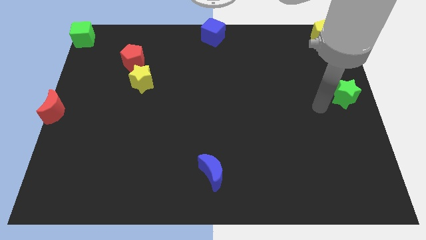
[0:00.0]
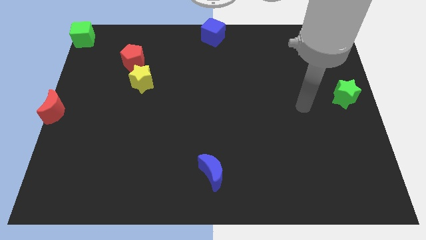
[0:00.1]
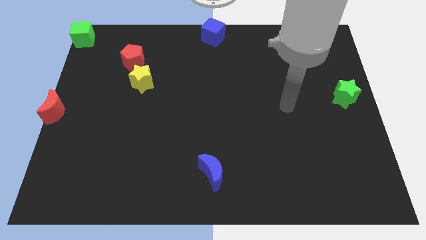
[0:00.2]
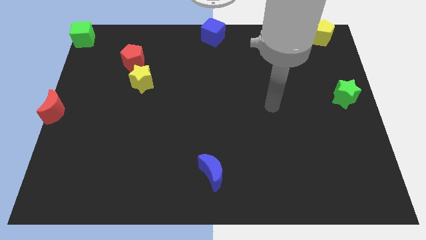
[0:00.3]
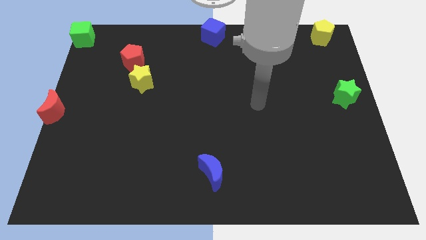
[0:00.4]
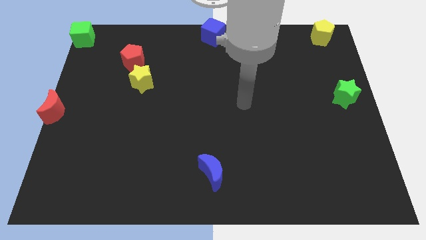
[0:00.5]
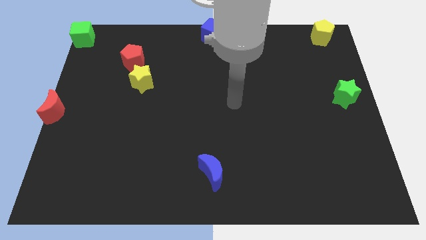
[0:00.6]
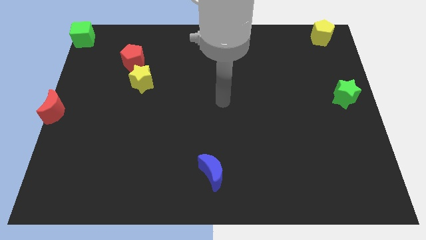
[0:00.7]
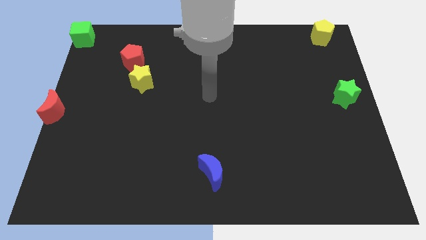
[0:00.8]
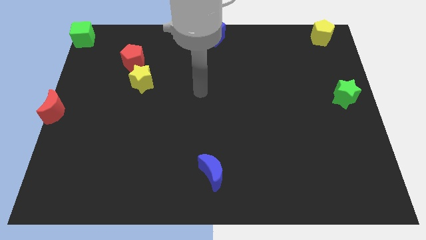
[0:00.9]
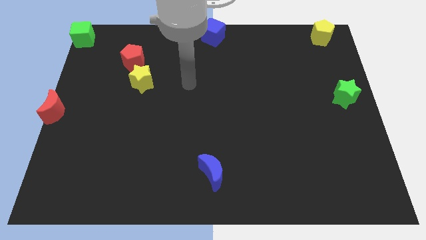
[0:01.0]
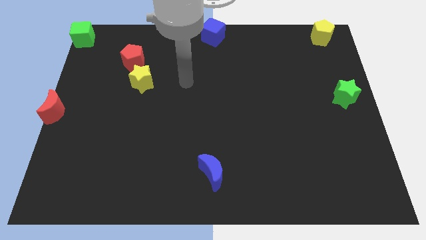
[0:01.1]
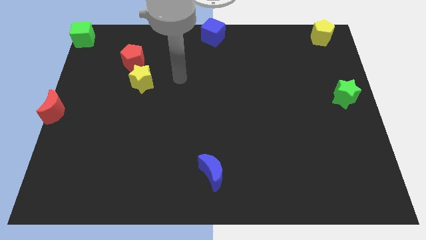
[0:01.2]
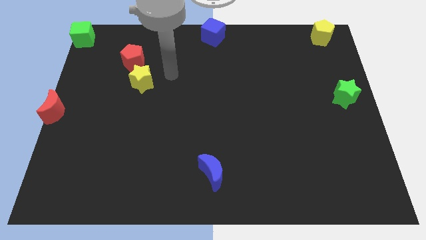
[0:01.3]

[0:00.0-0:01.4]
move away from the green star

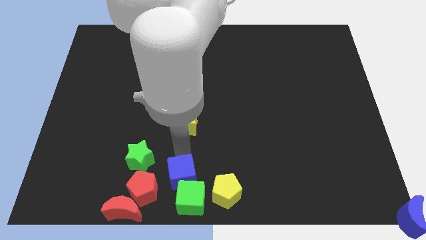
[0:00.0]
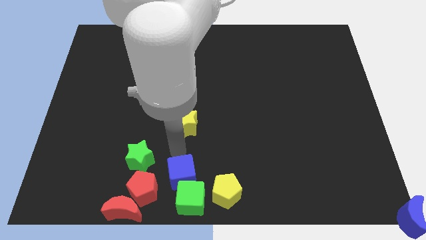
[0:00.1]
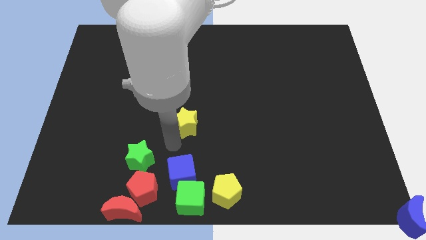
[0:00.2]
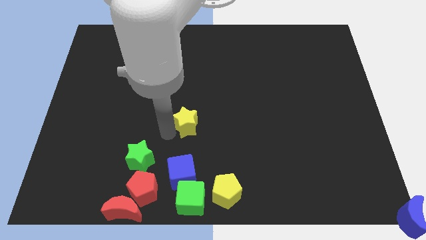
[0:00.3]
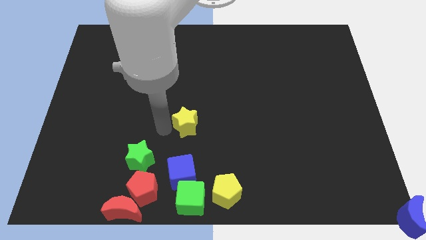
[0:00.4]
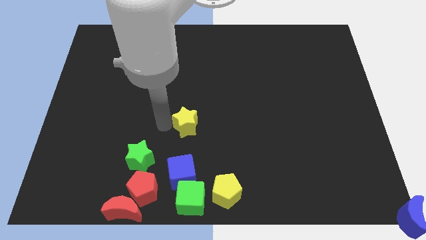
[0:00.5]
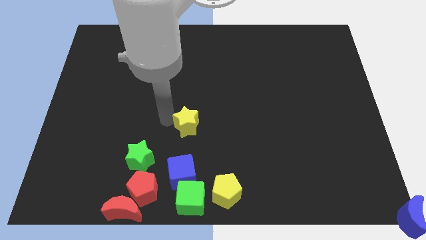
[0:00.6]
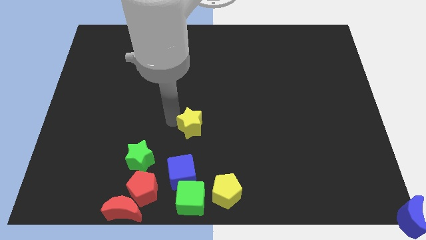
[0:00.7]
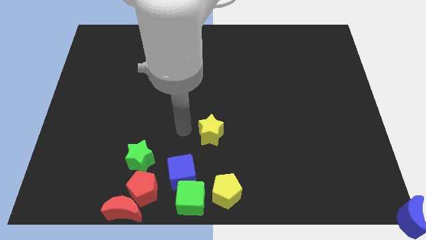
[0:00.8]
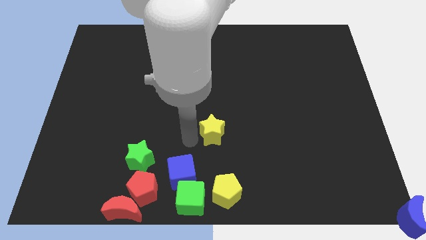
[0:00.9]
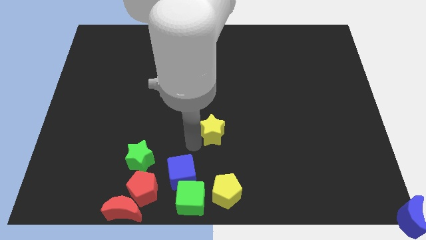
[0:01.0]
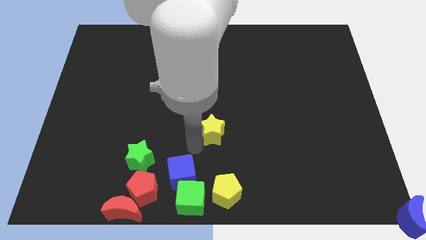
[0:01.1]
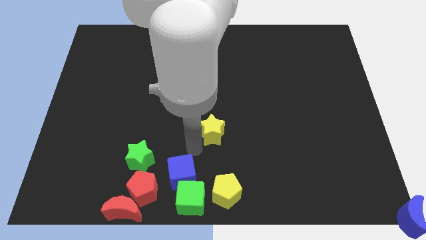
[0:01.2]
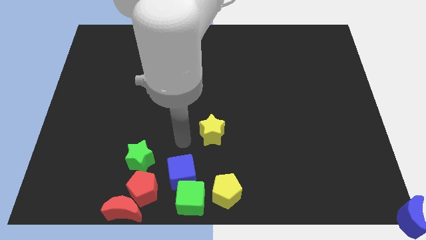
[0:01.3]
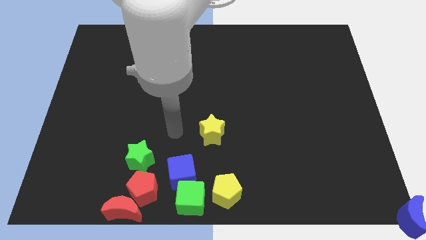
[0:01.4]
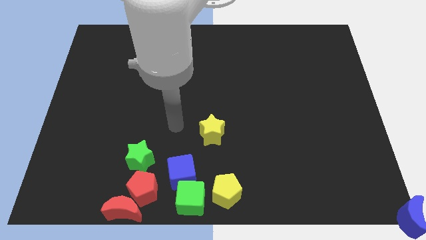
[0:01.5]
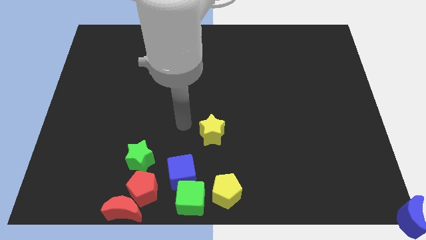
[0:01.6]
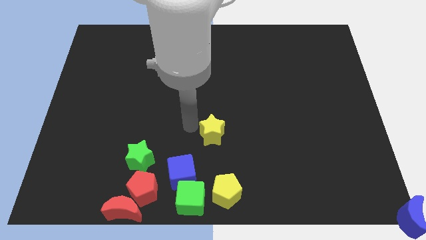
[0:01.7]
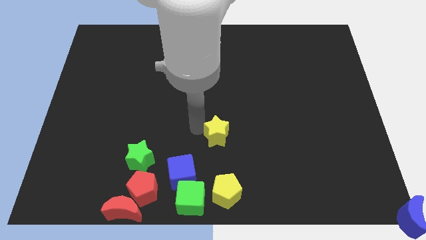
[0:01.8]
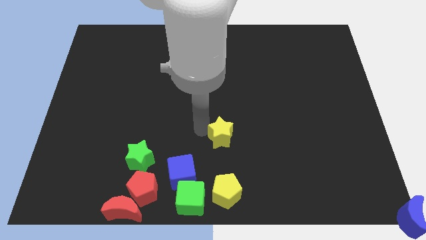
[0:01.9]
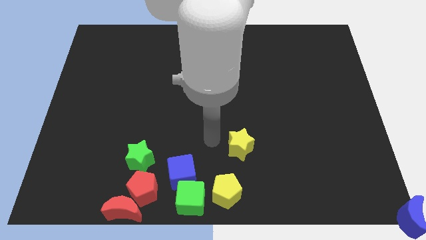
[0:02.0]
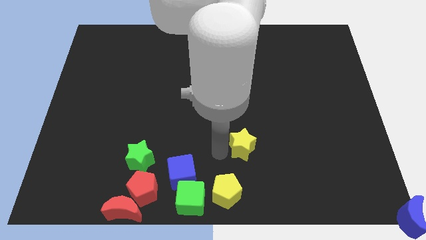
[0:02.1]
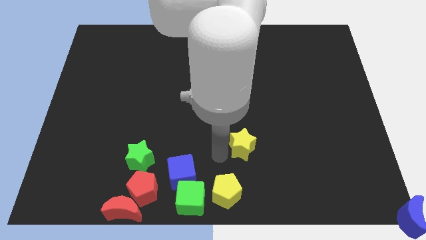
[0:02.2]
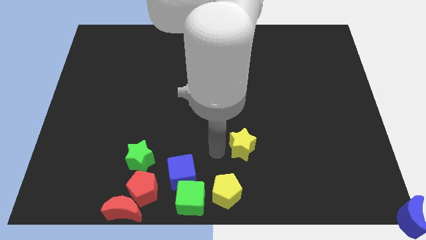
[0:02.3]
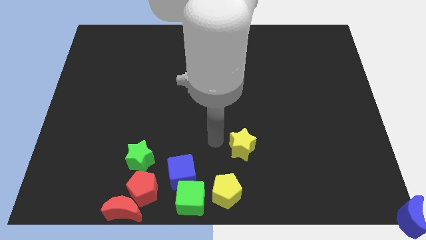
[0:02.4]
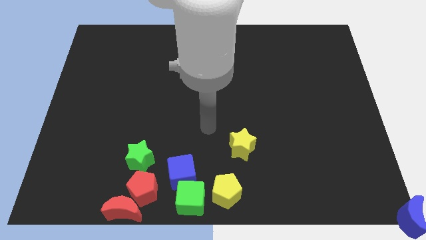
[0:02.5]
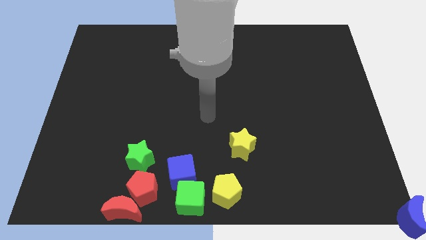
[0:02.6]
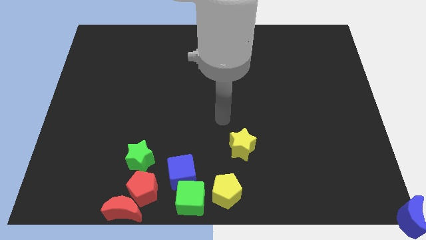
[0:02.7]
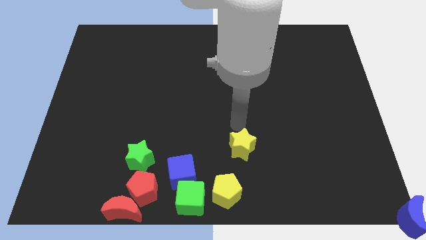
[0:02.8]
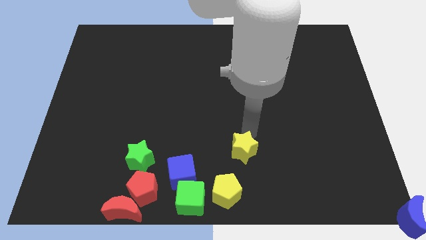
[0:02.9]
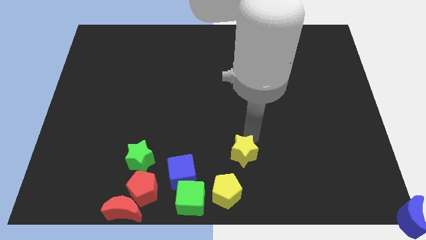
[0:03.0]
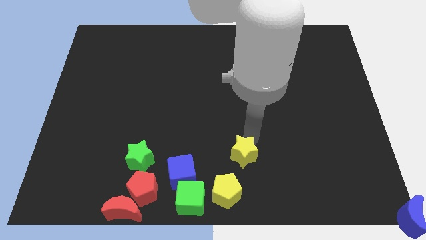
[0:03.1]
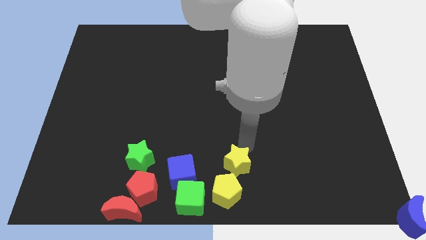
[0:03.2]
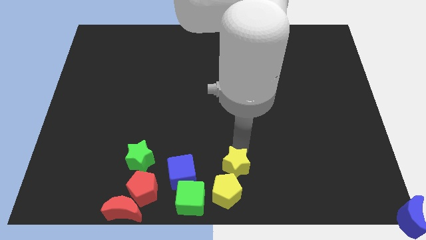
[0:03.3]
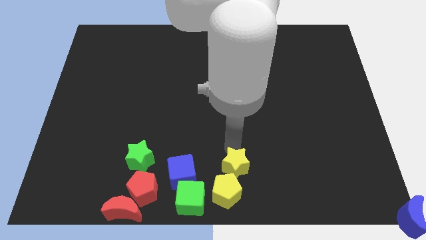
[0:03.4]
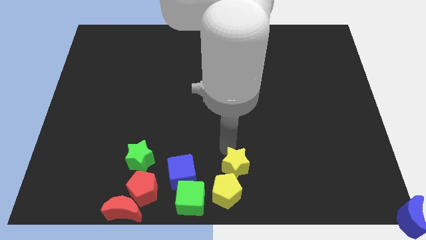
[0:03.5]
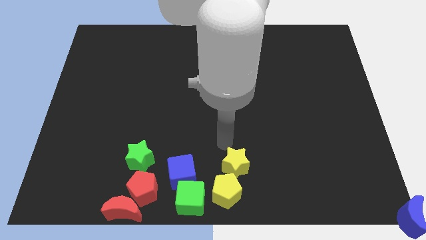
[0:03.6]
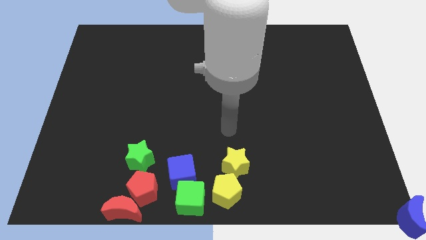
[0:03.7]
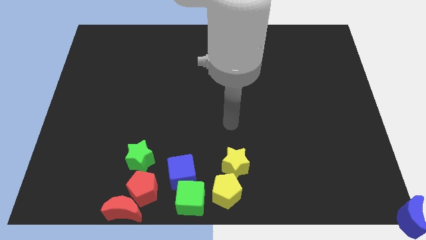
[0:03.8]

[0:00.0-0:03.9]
move the yellow star to the top of the yellow pentagon

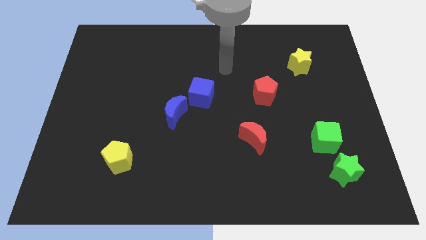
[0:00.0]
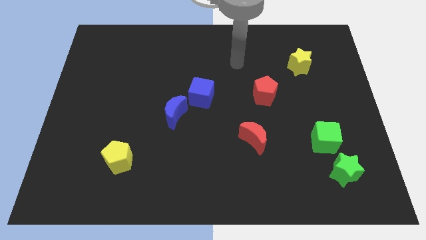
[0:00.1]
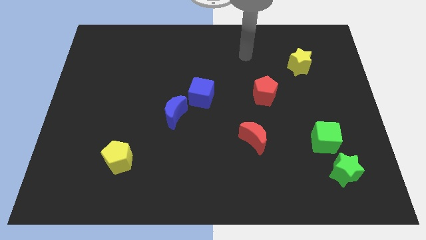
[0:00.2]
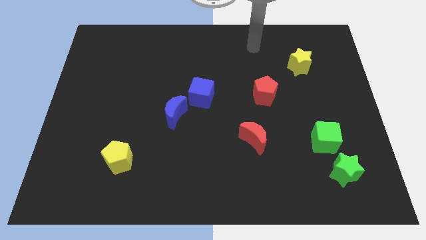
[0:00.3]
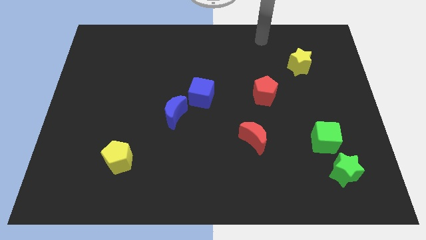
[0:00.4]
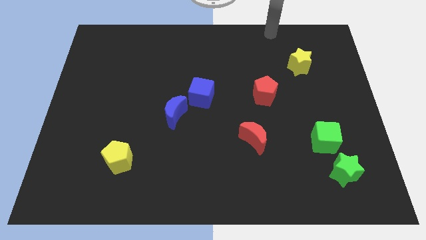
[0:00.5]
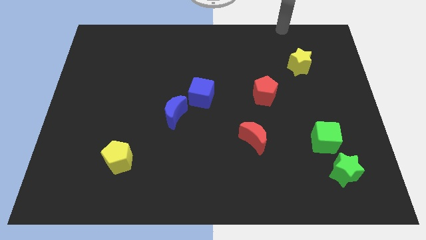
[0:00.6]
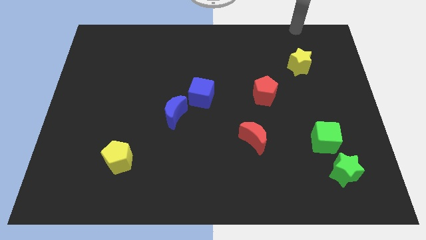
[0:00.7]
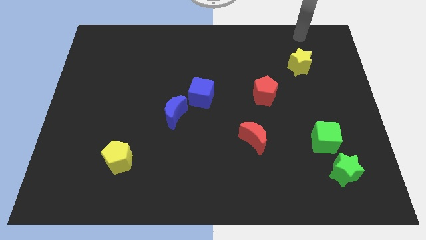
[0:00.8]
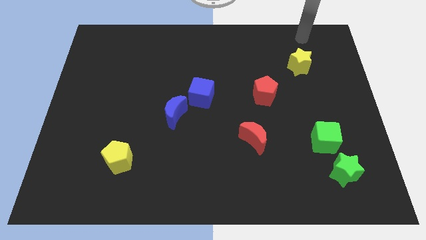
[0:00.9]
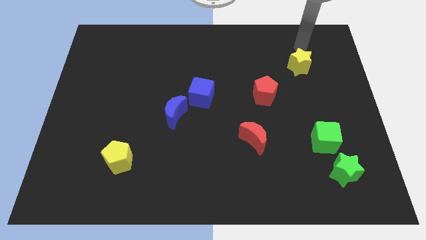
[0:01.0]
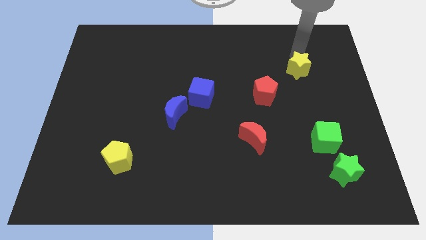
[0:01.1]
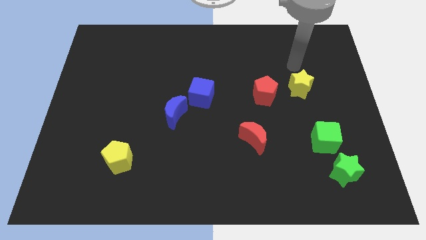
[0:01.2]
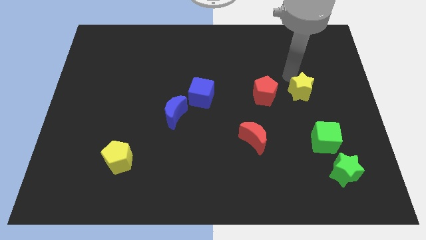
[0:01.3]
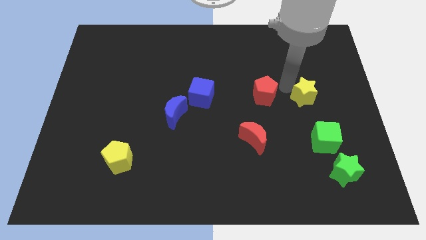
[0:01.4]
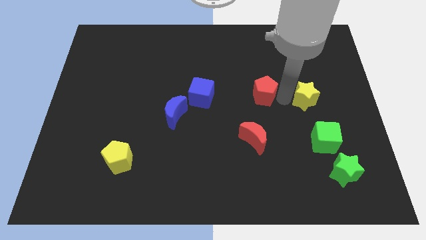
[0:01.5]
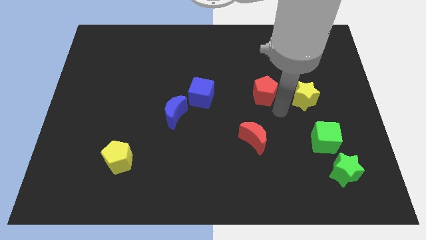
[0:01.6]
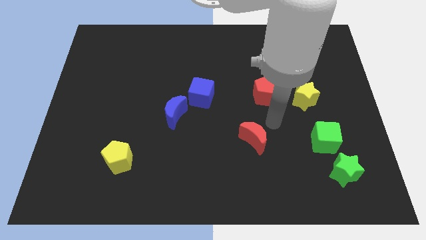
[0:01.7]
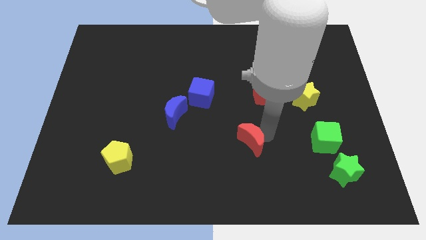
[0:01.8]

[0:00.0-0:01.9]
move the yellow star towards the bottom side

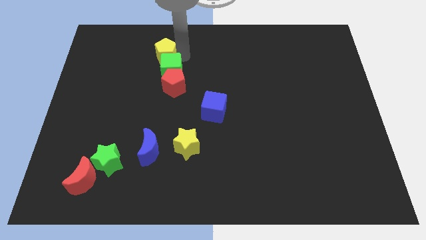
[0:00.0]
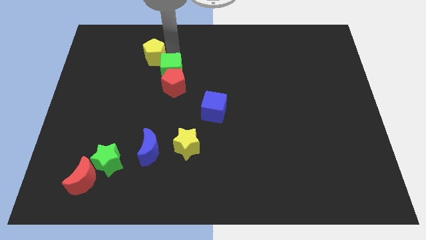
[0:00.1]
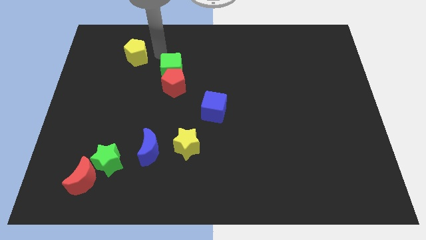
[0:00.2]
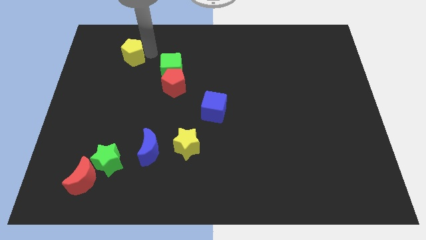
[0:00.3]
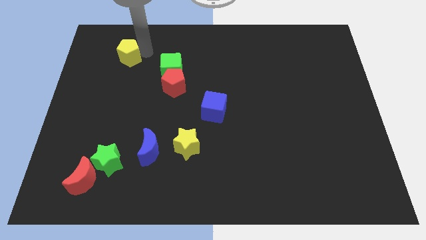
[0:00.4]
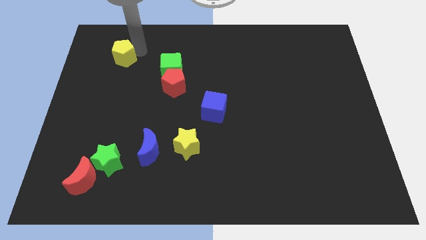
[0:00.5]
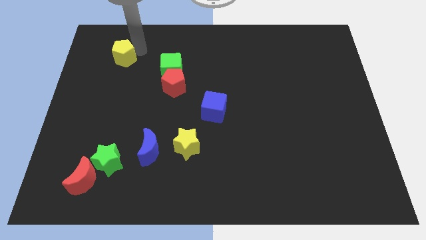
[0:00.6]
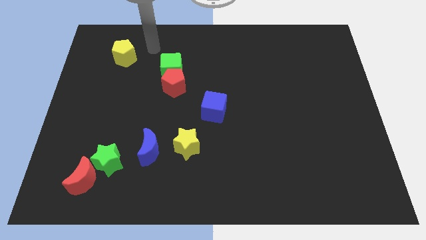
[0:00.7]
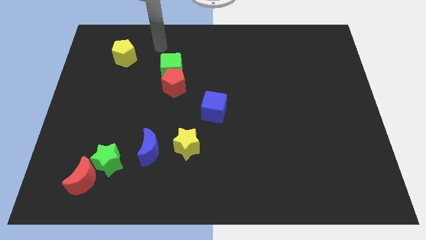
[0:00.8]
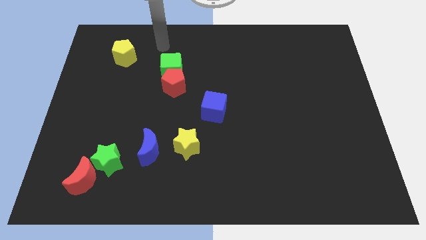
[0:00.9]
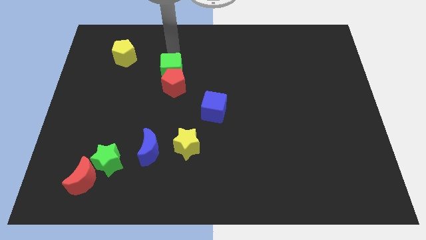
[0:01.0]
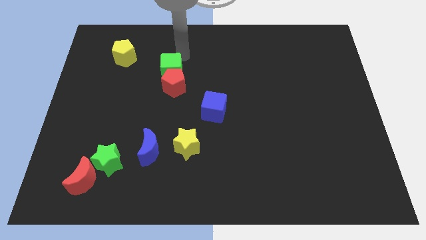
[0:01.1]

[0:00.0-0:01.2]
move the yellow pentagon to the top left of the board

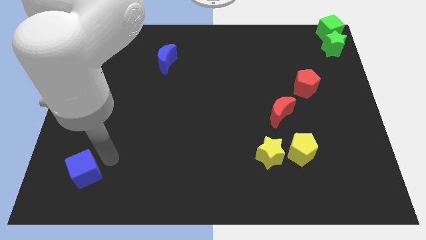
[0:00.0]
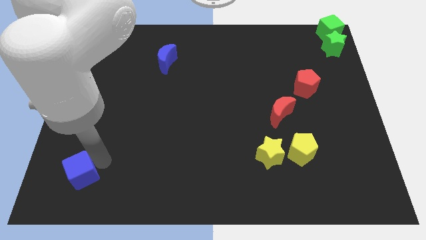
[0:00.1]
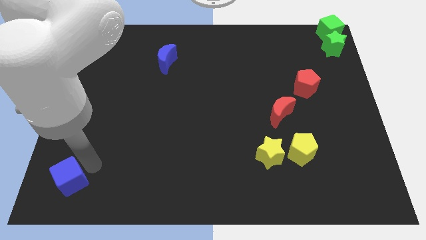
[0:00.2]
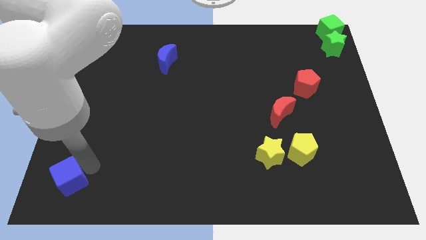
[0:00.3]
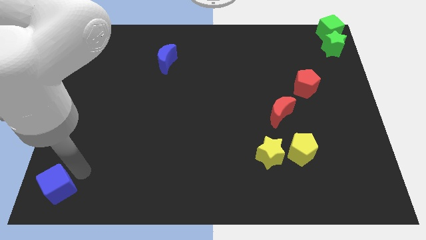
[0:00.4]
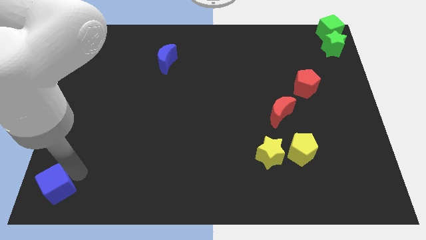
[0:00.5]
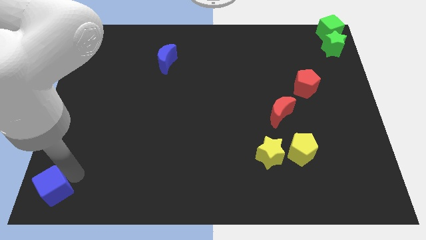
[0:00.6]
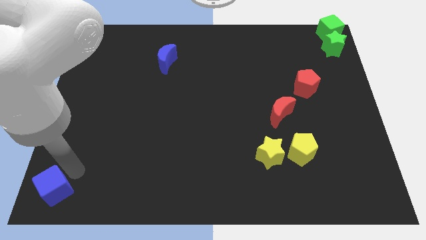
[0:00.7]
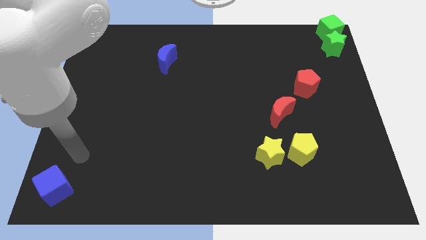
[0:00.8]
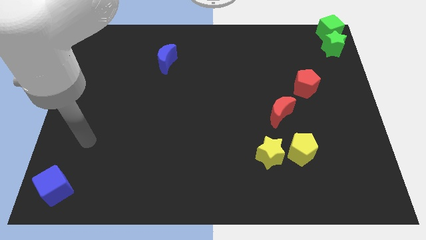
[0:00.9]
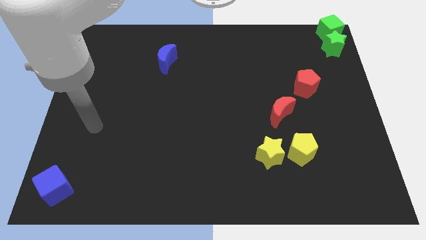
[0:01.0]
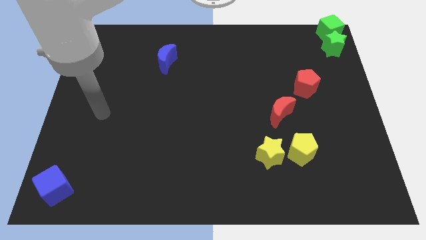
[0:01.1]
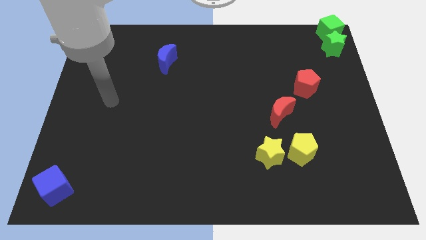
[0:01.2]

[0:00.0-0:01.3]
move the blue cube to the left bottom
